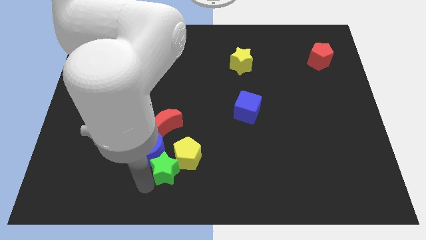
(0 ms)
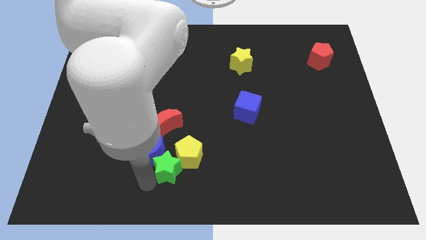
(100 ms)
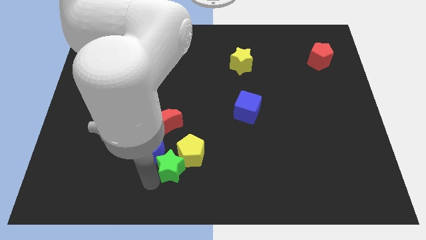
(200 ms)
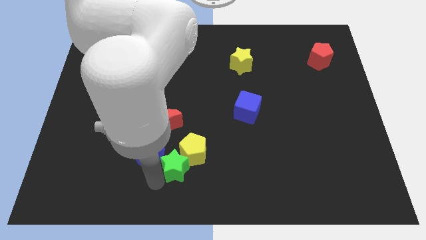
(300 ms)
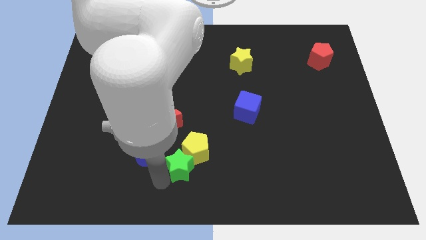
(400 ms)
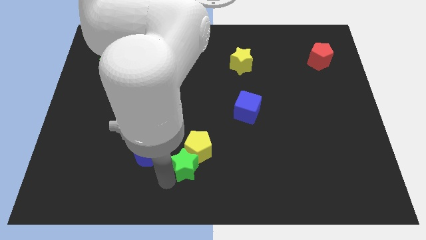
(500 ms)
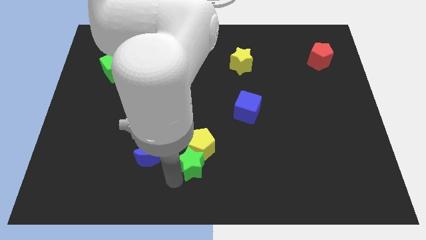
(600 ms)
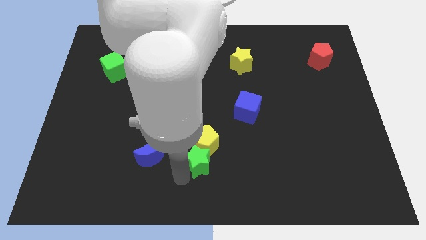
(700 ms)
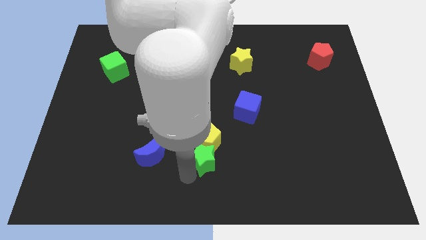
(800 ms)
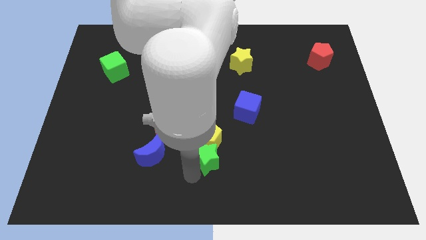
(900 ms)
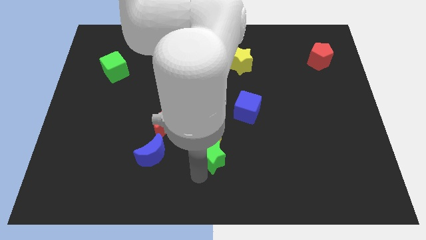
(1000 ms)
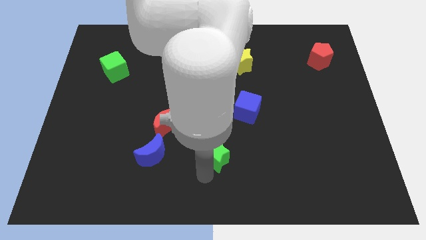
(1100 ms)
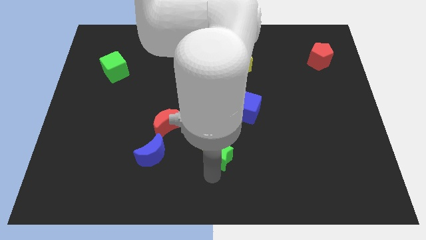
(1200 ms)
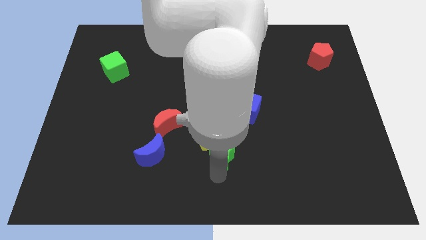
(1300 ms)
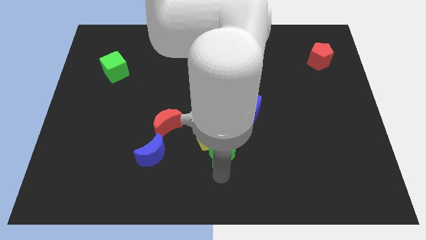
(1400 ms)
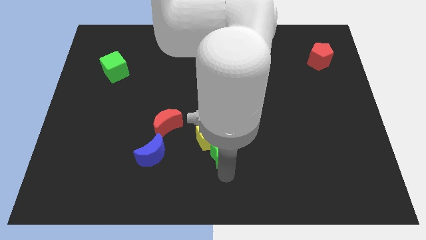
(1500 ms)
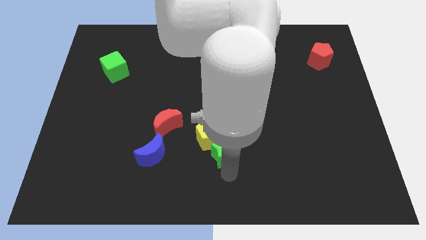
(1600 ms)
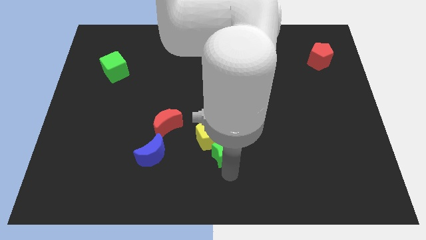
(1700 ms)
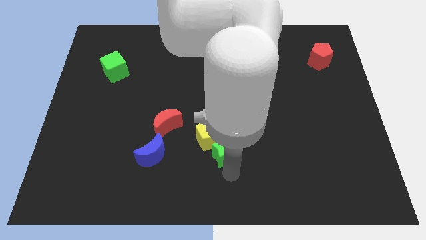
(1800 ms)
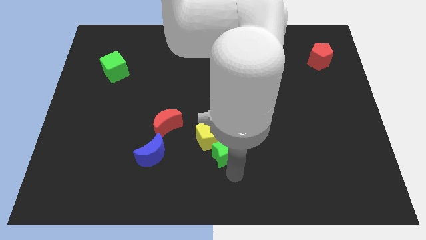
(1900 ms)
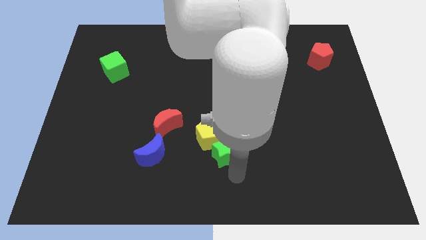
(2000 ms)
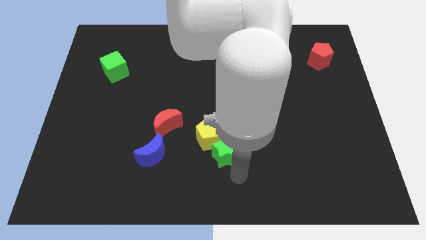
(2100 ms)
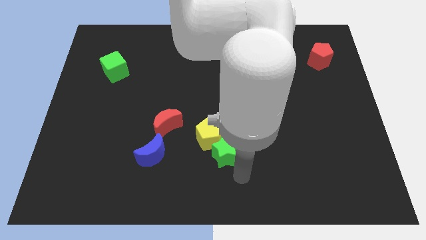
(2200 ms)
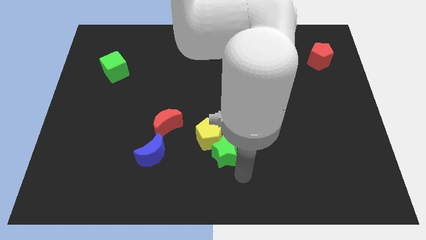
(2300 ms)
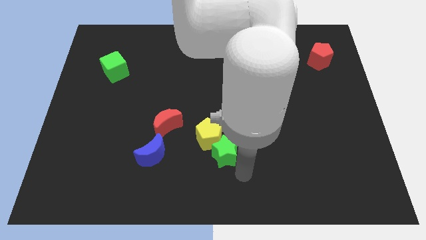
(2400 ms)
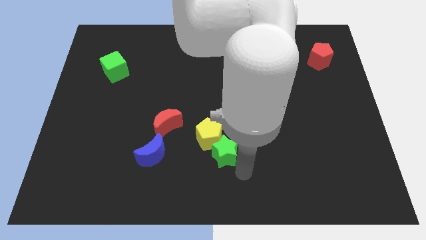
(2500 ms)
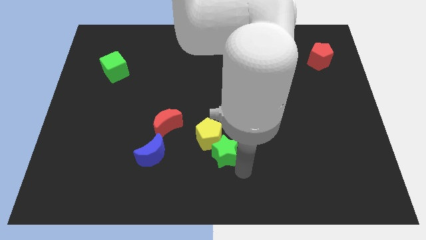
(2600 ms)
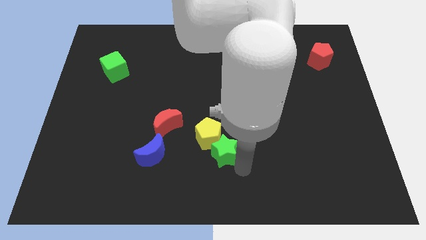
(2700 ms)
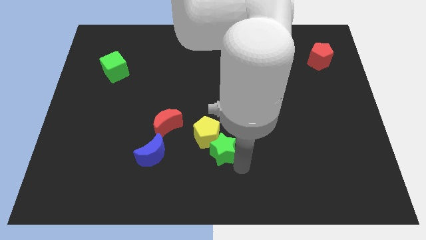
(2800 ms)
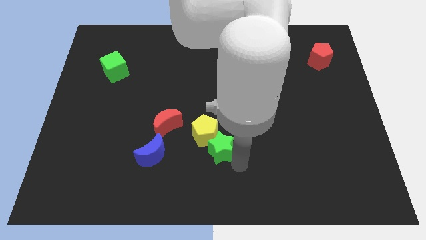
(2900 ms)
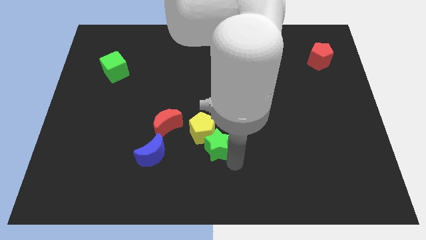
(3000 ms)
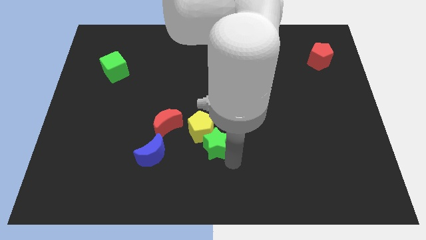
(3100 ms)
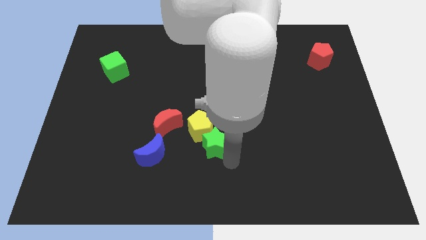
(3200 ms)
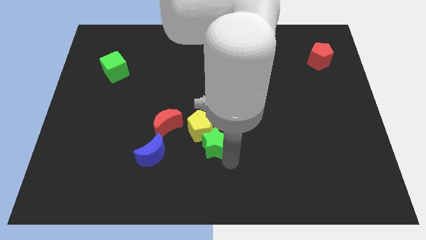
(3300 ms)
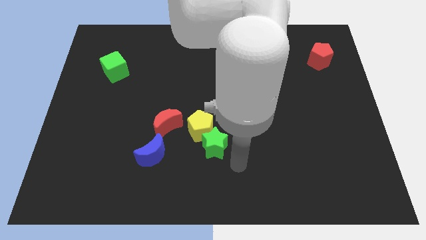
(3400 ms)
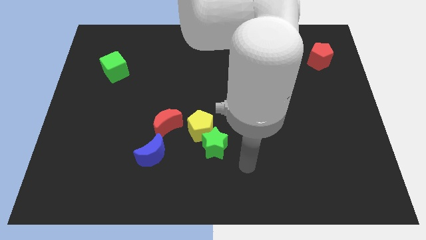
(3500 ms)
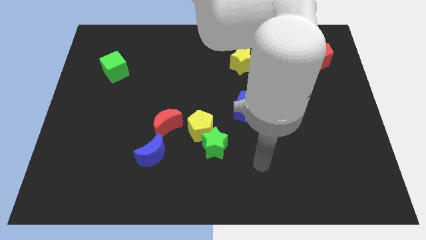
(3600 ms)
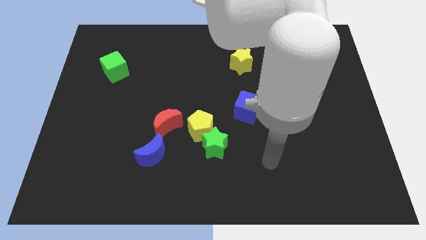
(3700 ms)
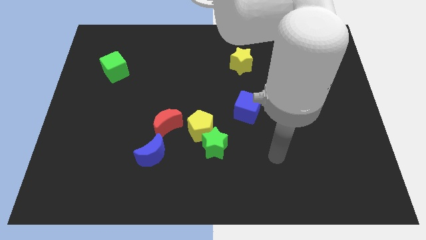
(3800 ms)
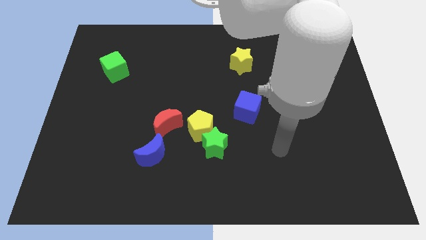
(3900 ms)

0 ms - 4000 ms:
place the green star to the right bottom of the yellow pentagon

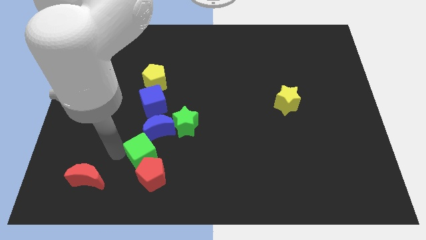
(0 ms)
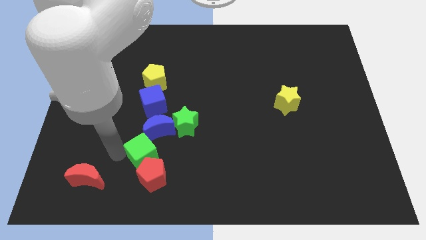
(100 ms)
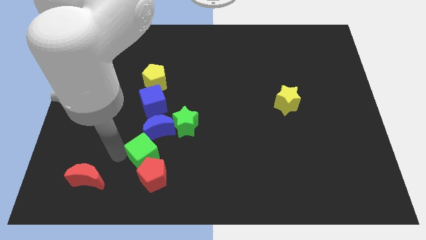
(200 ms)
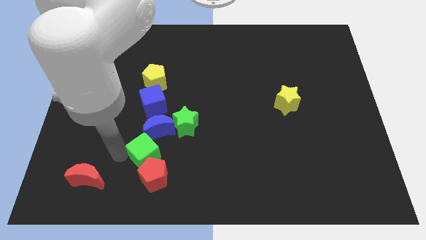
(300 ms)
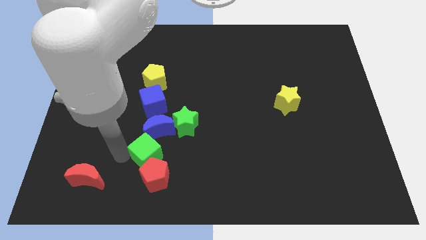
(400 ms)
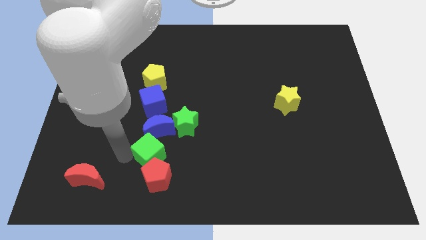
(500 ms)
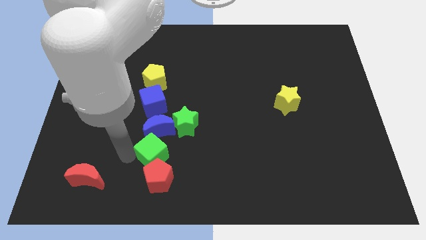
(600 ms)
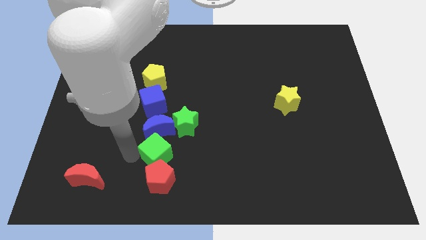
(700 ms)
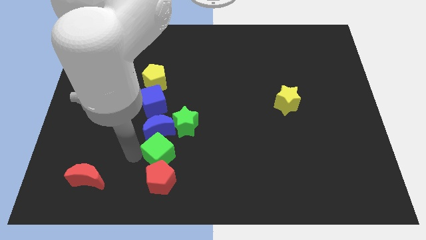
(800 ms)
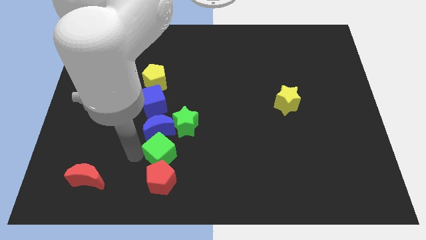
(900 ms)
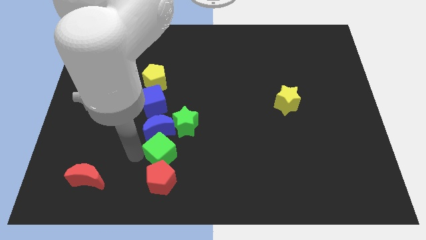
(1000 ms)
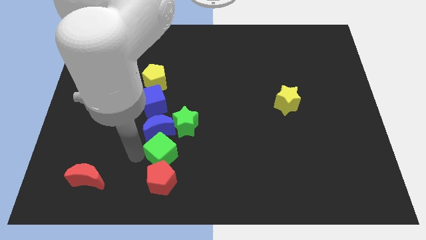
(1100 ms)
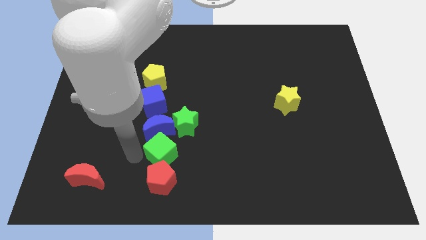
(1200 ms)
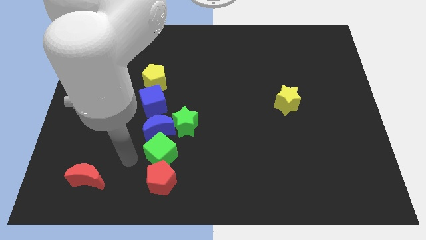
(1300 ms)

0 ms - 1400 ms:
move green cube below blue moon

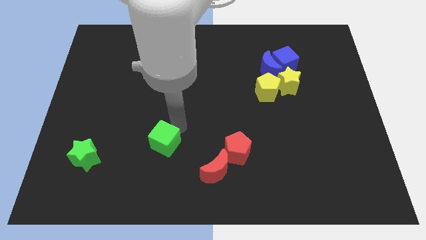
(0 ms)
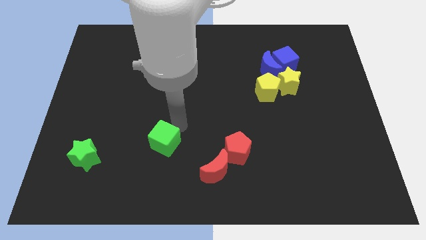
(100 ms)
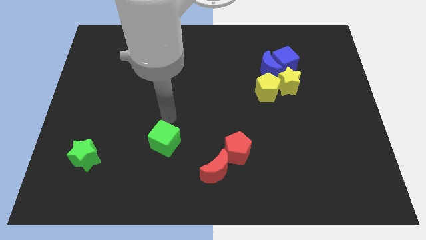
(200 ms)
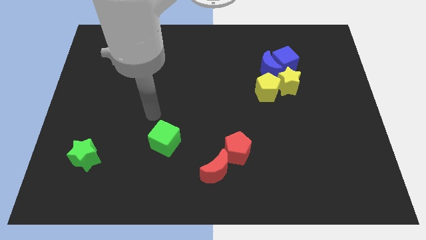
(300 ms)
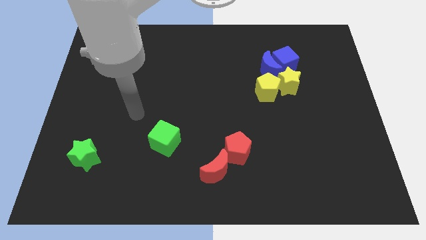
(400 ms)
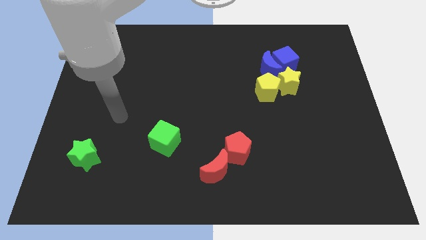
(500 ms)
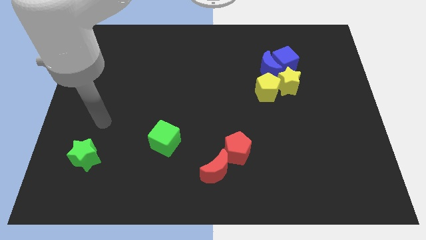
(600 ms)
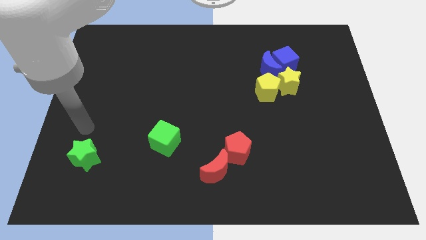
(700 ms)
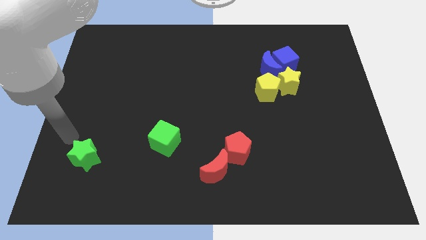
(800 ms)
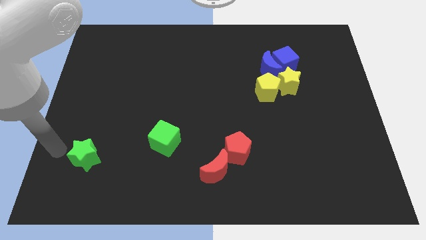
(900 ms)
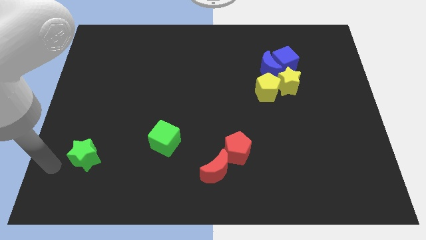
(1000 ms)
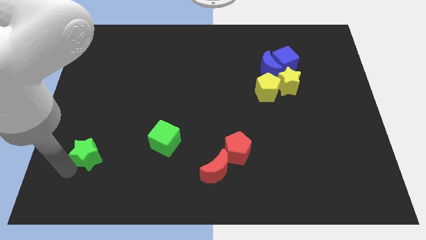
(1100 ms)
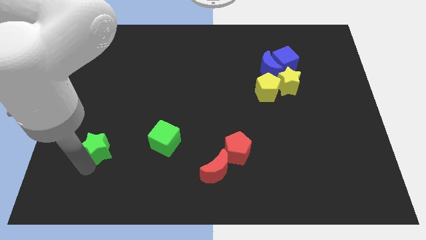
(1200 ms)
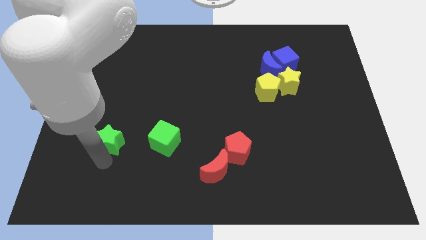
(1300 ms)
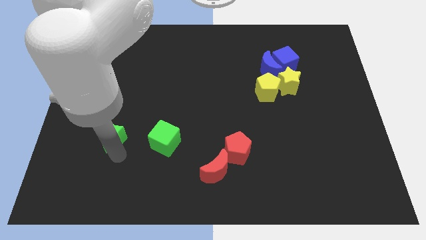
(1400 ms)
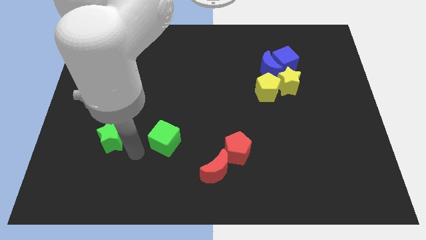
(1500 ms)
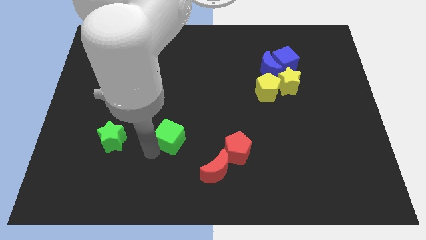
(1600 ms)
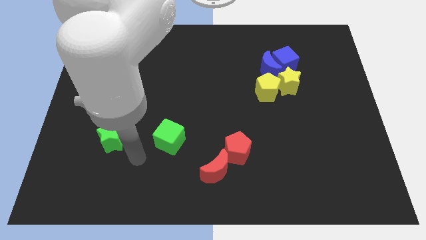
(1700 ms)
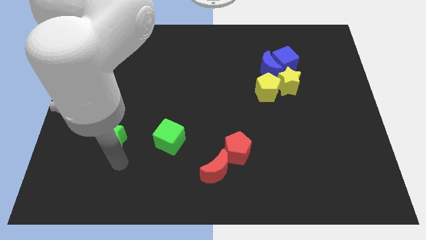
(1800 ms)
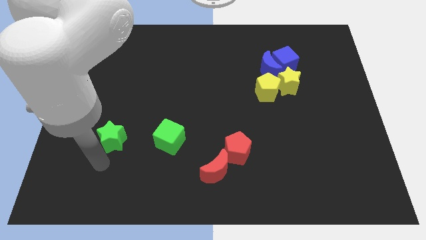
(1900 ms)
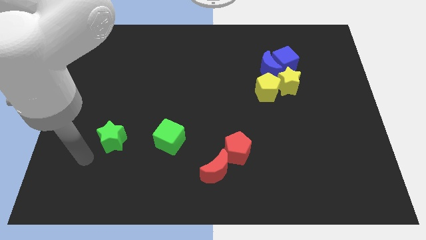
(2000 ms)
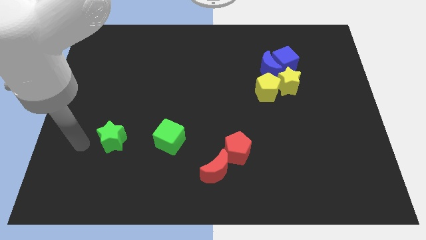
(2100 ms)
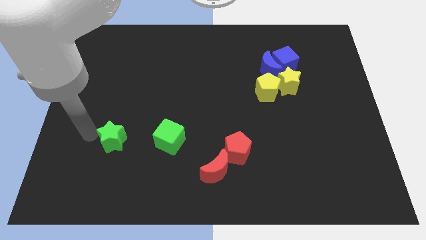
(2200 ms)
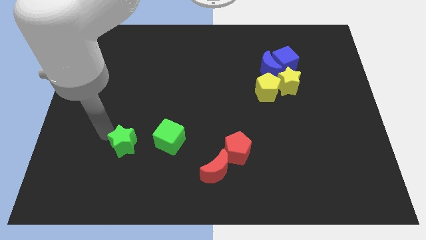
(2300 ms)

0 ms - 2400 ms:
move the green star to the left of the green cube

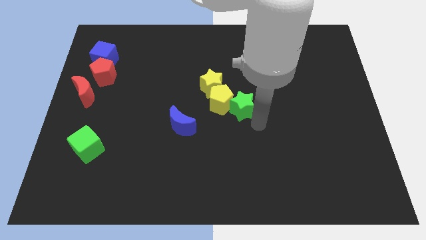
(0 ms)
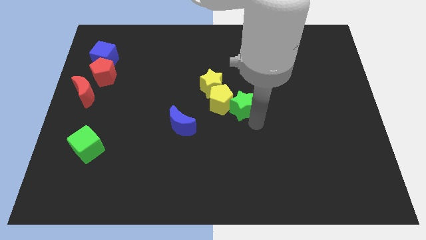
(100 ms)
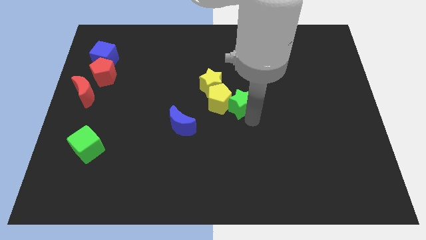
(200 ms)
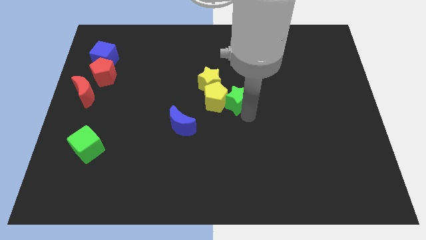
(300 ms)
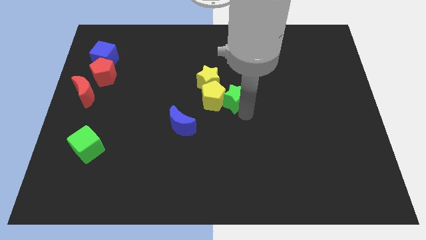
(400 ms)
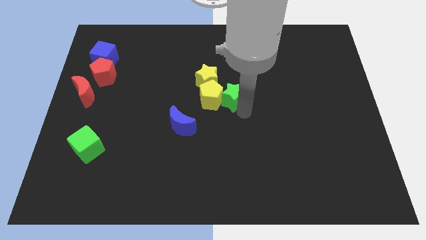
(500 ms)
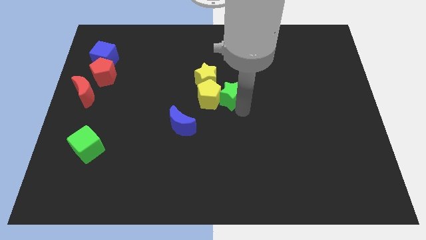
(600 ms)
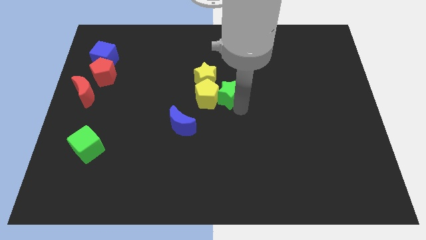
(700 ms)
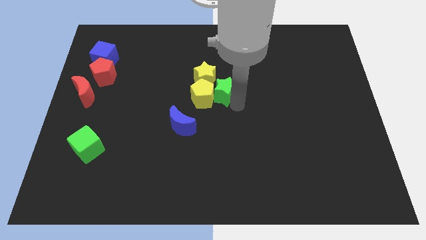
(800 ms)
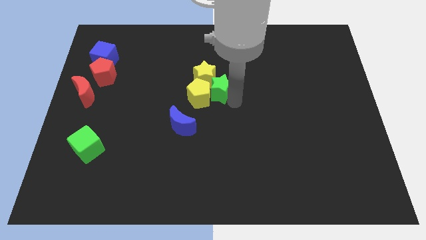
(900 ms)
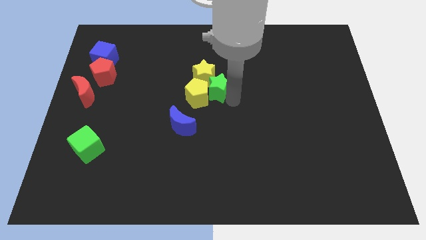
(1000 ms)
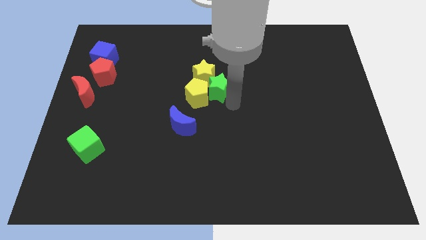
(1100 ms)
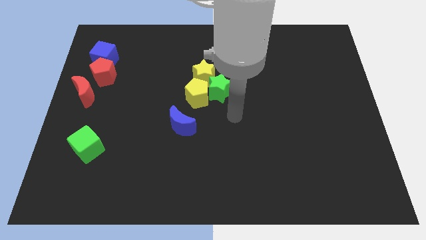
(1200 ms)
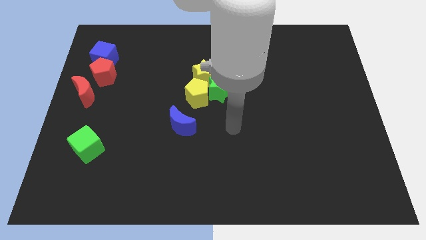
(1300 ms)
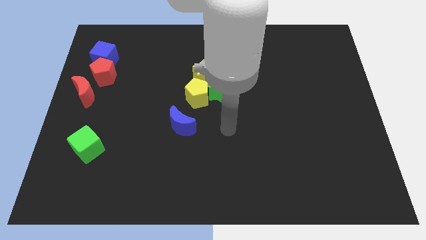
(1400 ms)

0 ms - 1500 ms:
push the group of blocks to the top side of the blue moon
